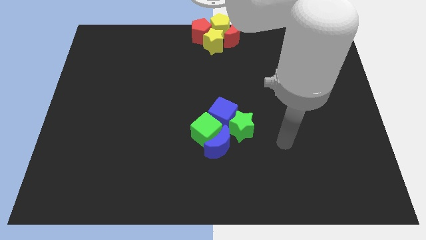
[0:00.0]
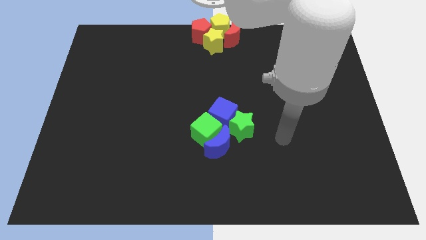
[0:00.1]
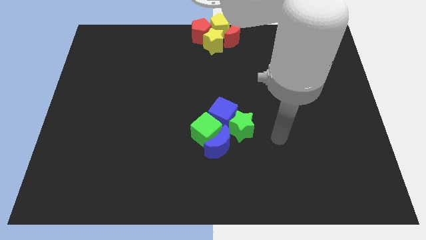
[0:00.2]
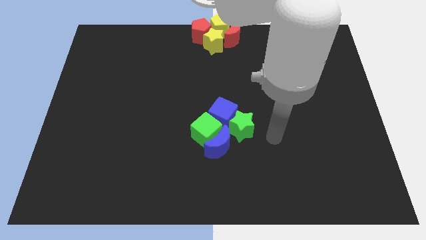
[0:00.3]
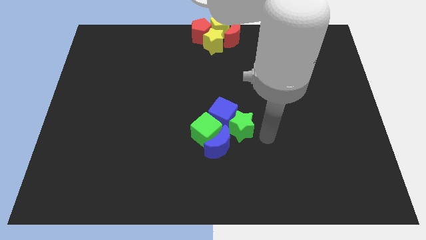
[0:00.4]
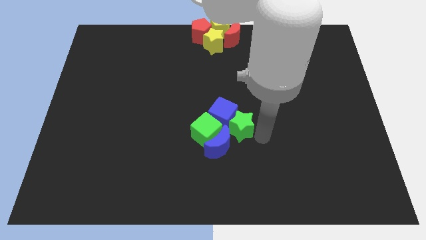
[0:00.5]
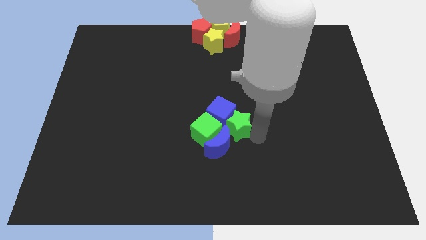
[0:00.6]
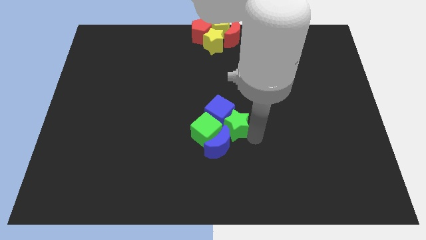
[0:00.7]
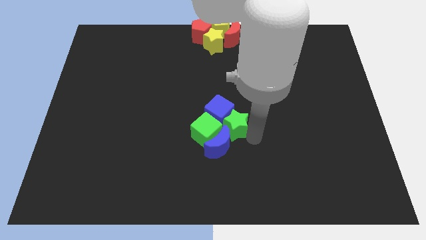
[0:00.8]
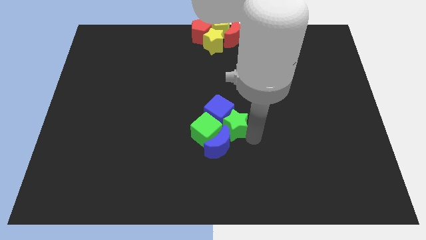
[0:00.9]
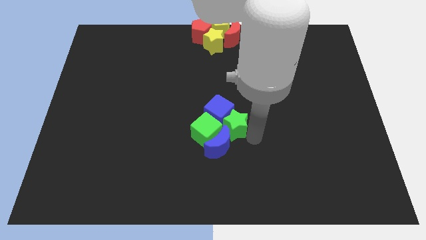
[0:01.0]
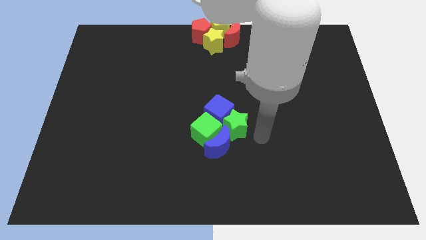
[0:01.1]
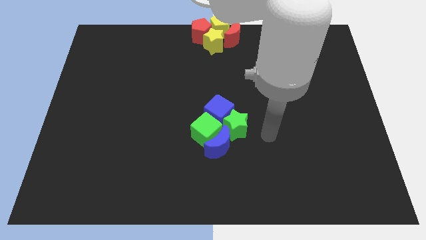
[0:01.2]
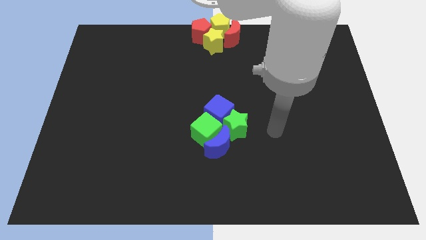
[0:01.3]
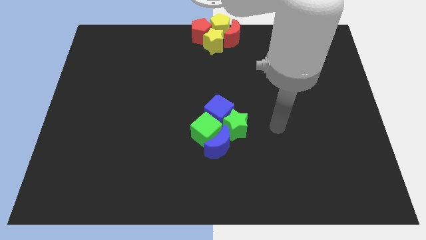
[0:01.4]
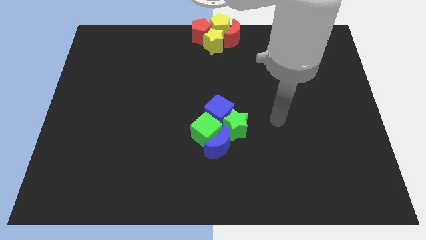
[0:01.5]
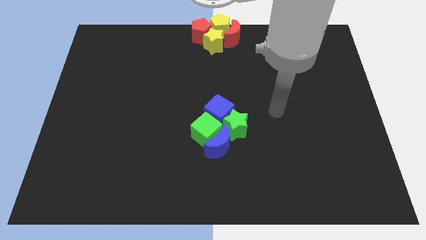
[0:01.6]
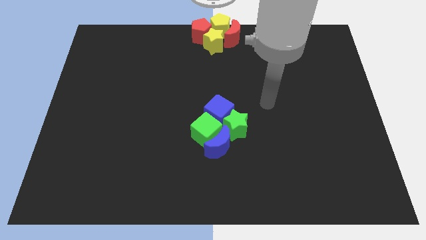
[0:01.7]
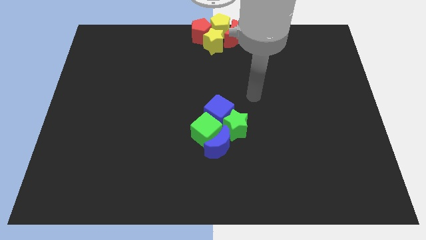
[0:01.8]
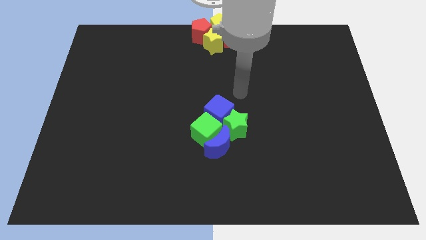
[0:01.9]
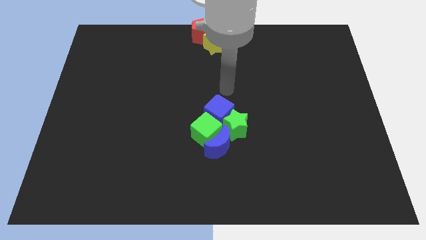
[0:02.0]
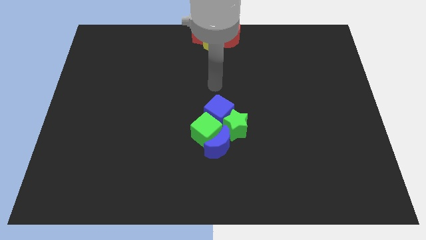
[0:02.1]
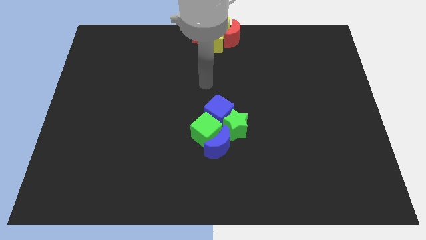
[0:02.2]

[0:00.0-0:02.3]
move your arm to the top of blue cube

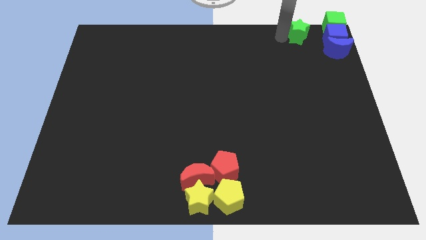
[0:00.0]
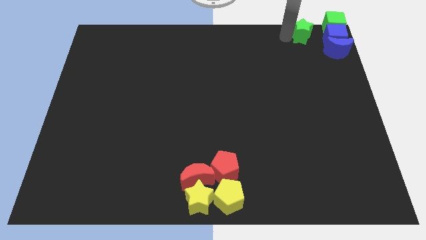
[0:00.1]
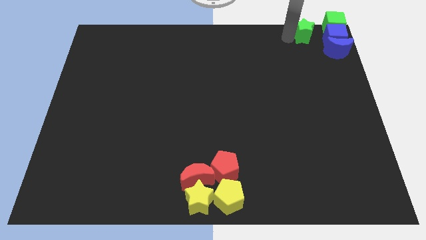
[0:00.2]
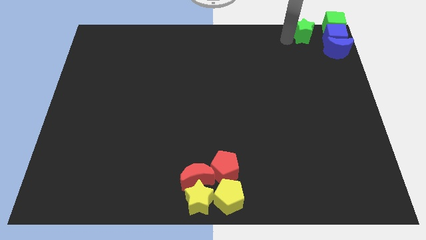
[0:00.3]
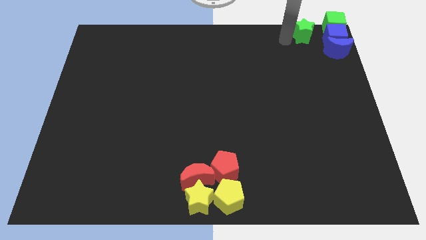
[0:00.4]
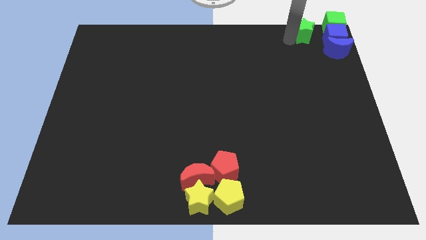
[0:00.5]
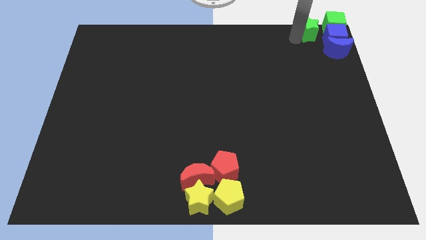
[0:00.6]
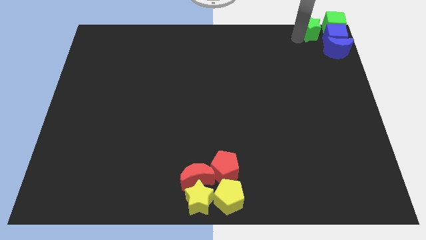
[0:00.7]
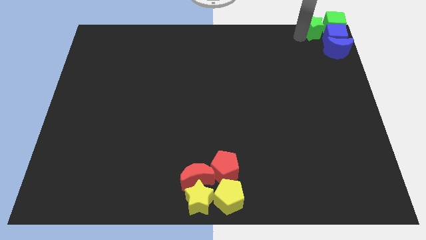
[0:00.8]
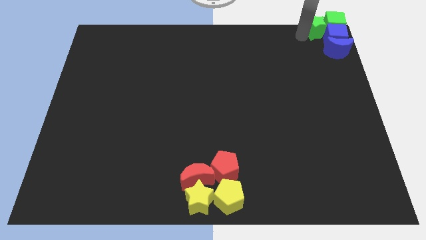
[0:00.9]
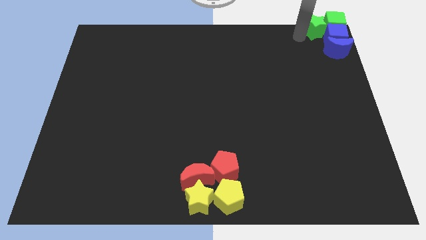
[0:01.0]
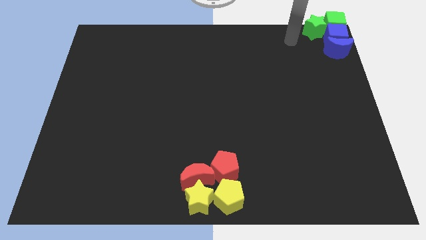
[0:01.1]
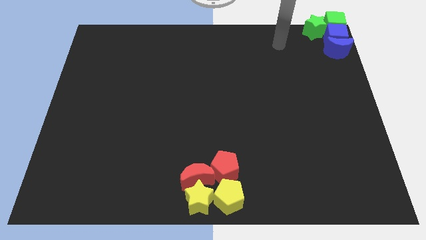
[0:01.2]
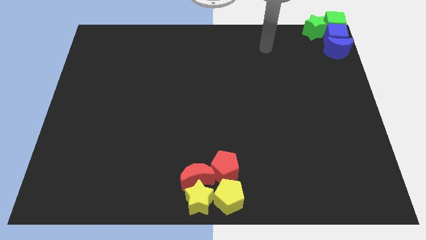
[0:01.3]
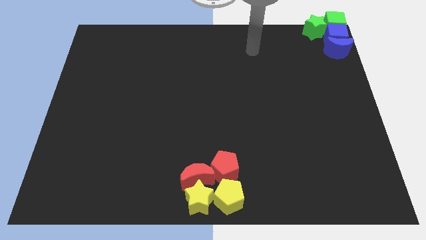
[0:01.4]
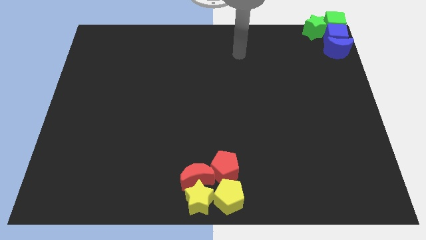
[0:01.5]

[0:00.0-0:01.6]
add the green star to the group of green and blue blocks at the top right corner of the board

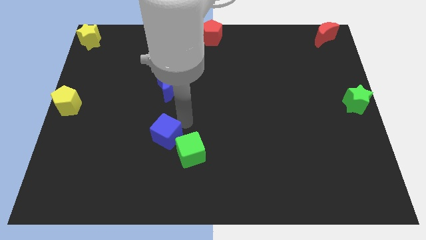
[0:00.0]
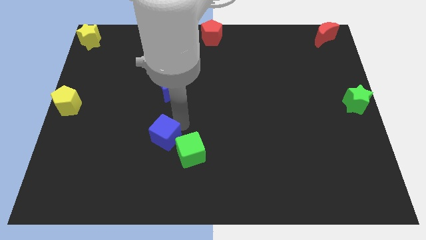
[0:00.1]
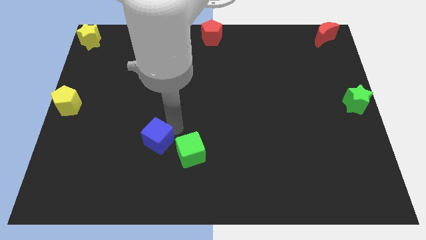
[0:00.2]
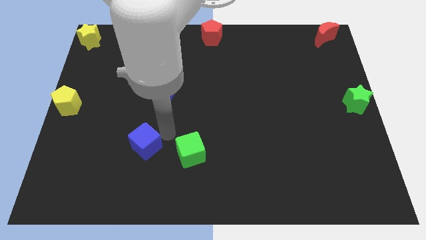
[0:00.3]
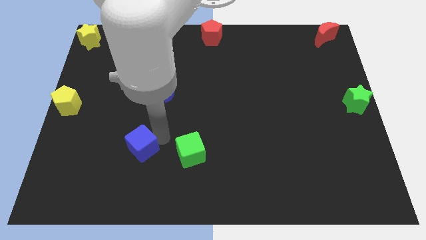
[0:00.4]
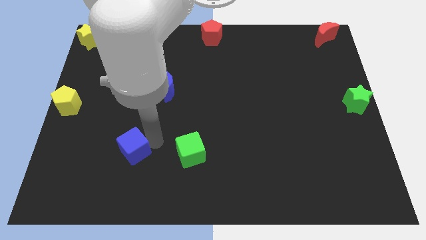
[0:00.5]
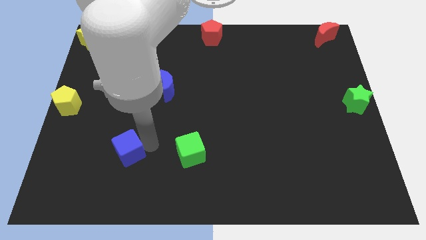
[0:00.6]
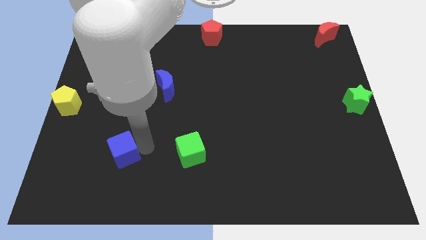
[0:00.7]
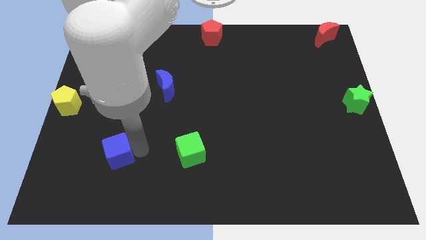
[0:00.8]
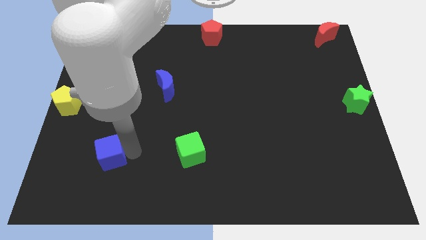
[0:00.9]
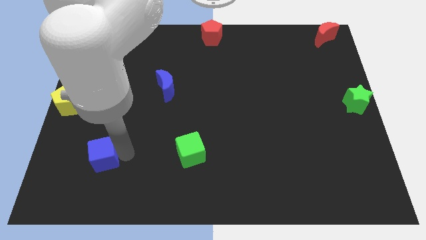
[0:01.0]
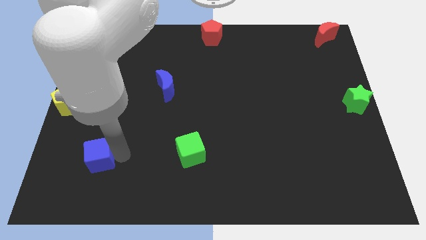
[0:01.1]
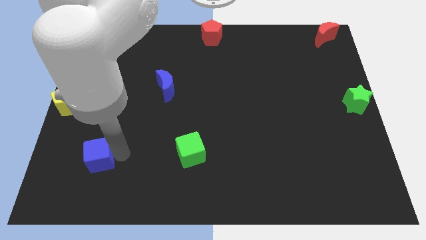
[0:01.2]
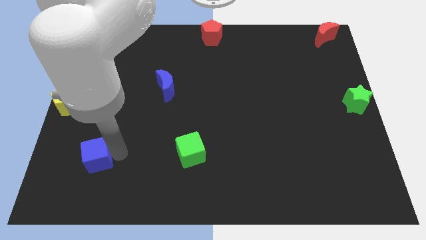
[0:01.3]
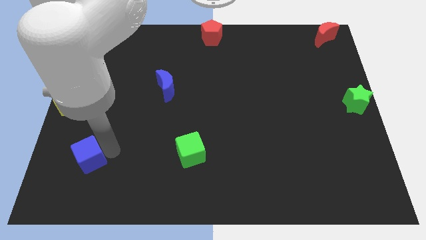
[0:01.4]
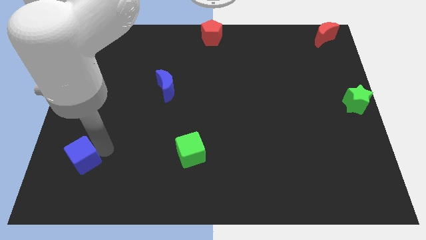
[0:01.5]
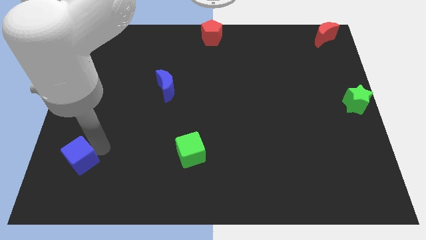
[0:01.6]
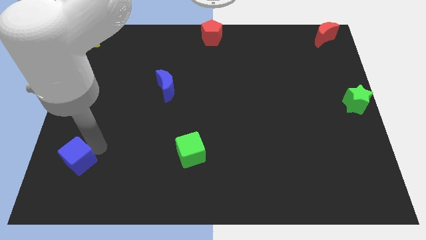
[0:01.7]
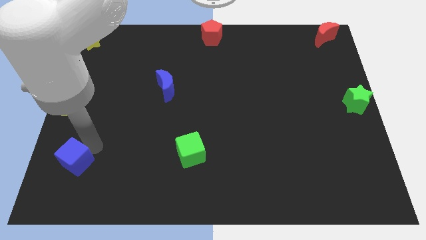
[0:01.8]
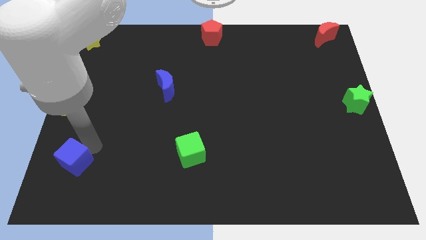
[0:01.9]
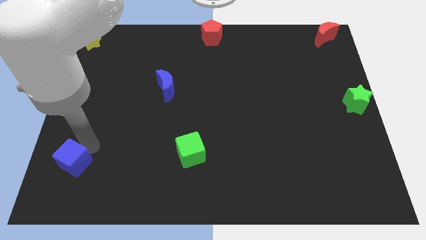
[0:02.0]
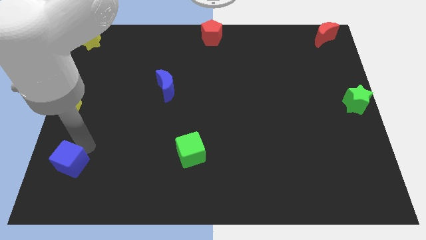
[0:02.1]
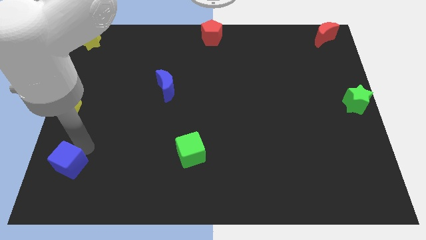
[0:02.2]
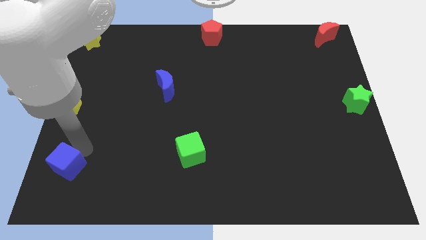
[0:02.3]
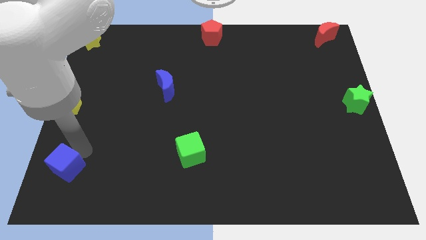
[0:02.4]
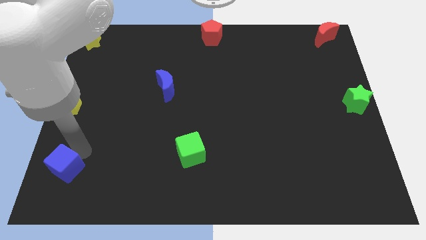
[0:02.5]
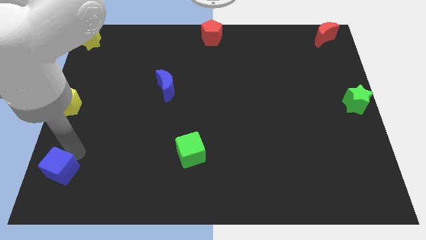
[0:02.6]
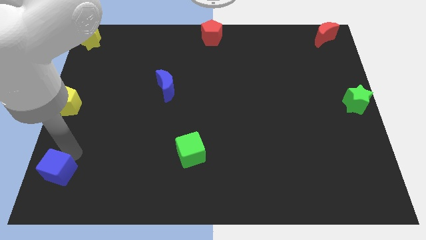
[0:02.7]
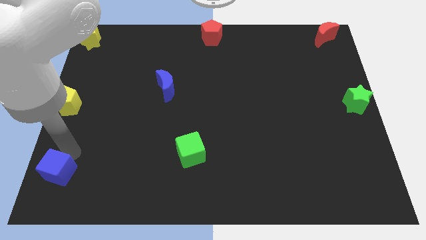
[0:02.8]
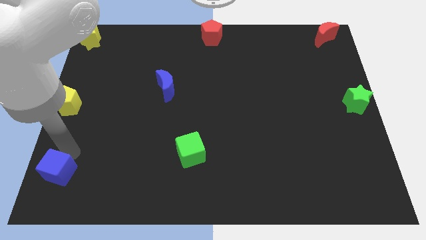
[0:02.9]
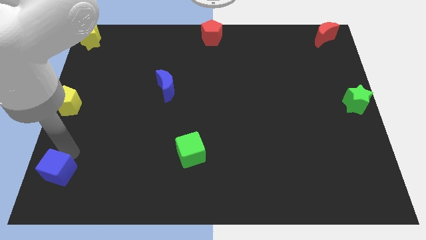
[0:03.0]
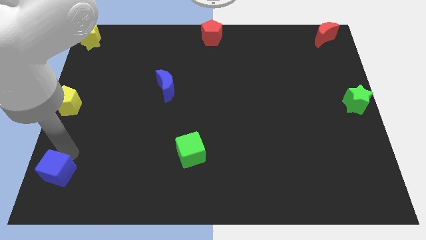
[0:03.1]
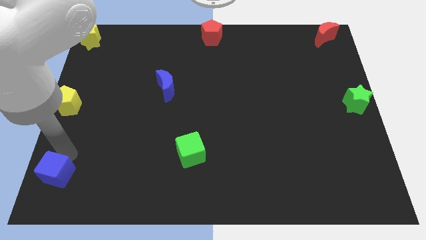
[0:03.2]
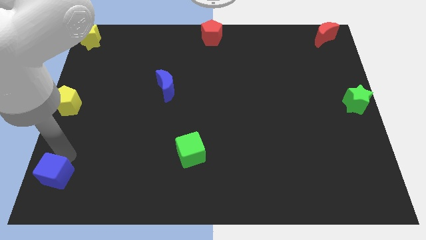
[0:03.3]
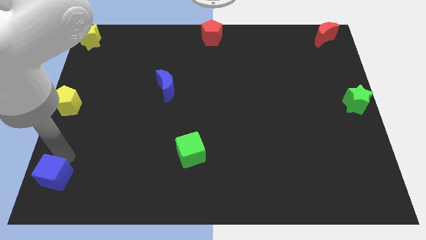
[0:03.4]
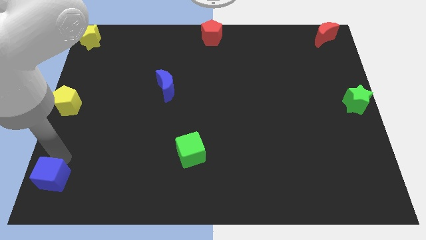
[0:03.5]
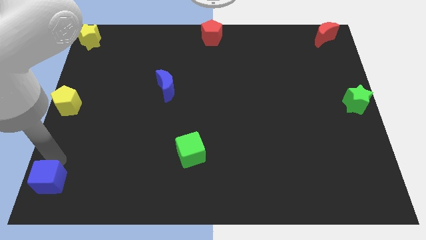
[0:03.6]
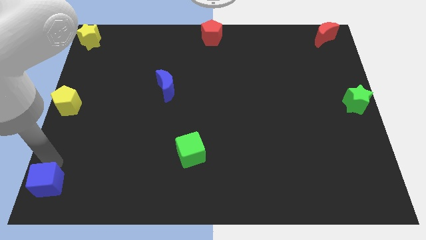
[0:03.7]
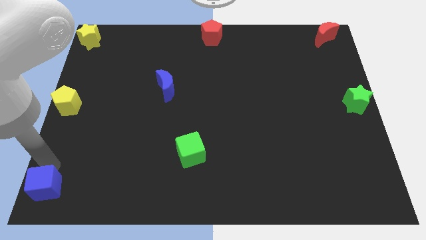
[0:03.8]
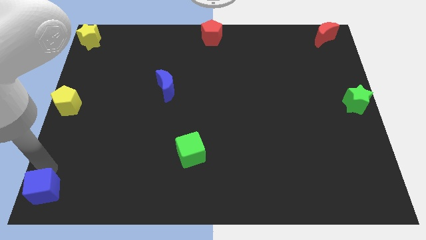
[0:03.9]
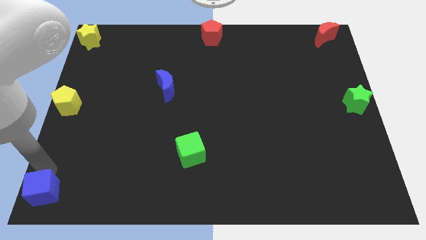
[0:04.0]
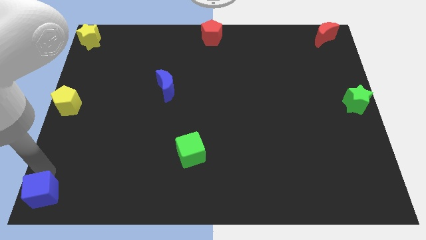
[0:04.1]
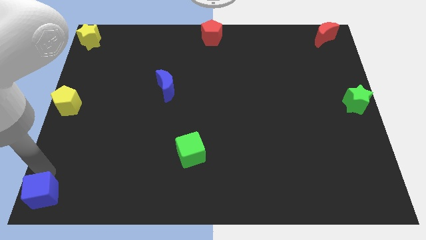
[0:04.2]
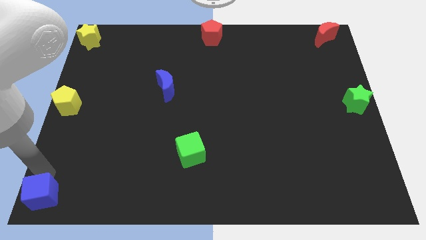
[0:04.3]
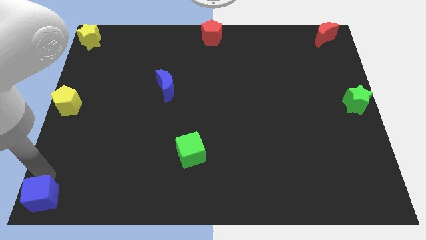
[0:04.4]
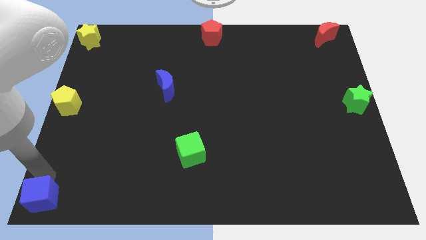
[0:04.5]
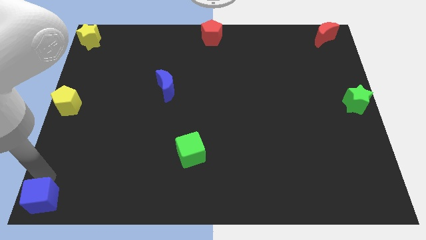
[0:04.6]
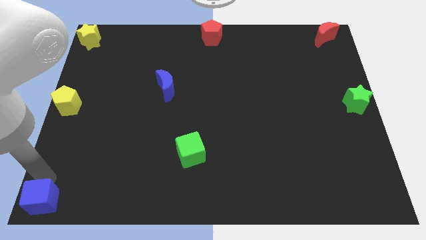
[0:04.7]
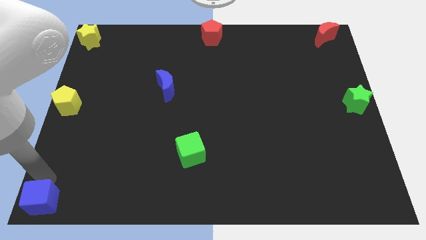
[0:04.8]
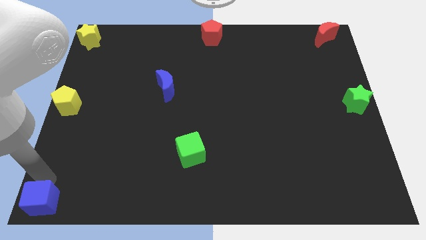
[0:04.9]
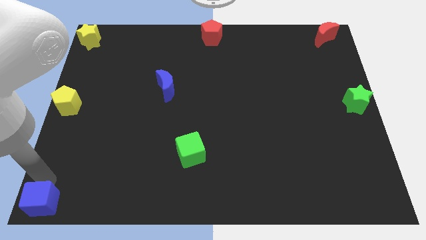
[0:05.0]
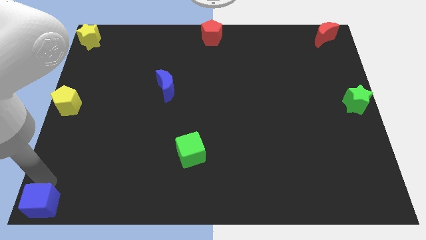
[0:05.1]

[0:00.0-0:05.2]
place a blue cube on the bottom corner of the board
